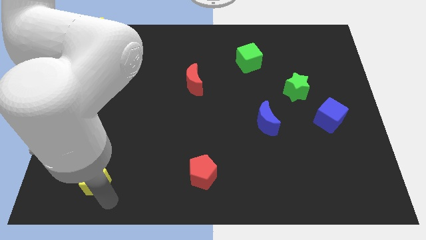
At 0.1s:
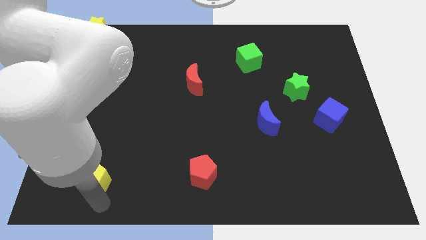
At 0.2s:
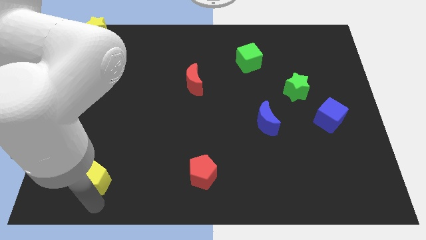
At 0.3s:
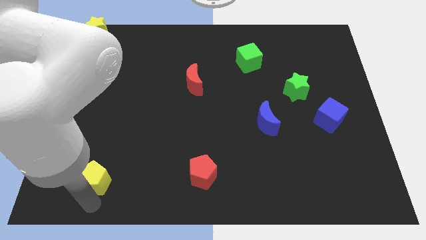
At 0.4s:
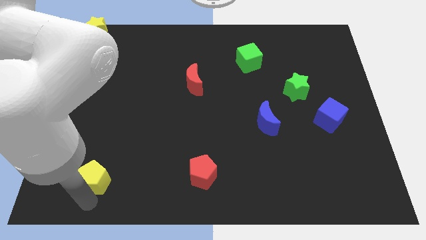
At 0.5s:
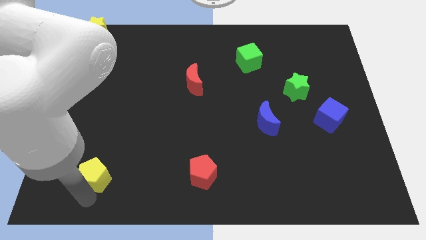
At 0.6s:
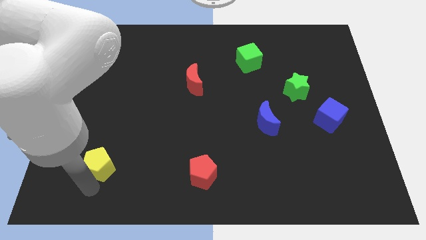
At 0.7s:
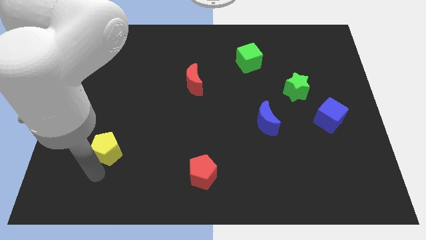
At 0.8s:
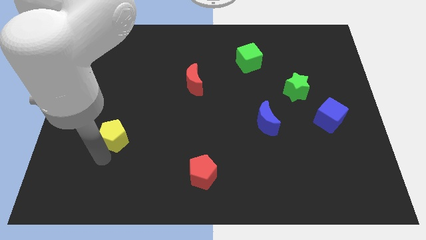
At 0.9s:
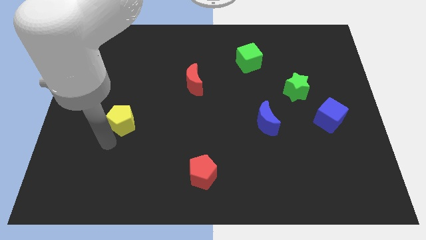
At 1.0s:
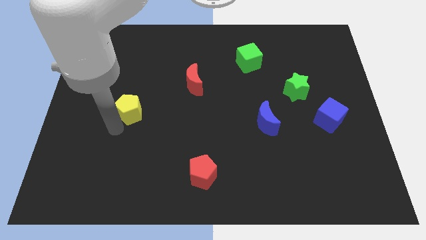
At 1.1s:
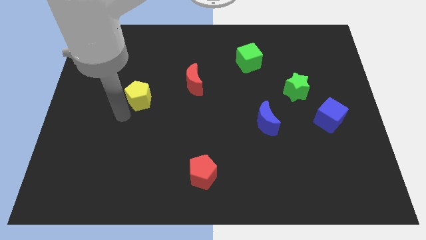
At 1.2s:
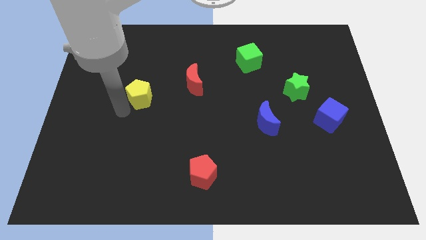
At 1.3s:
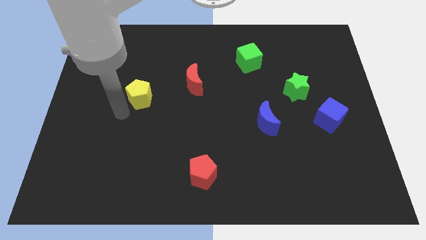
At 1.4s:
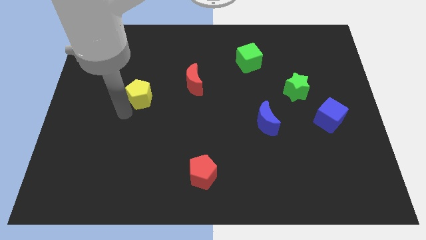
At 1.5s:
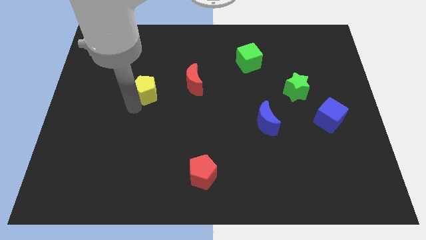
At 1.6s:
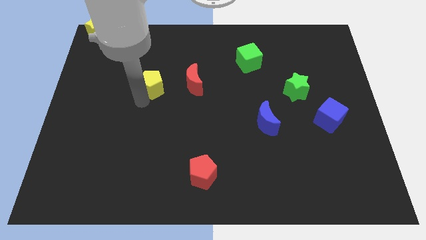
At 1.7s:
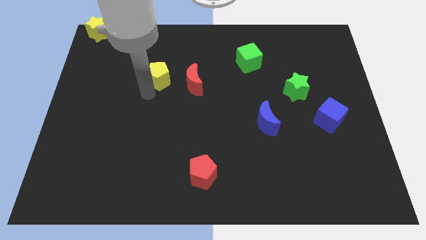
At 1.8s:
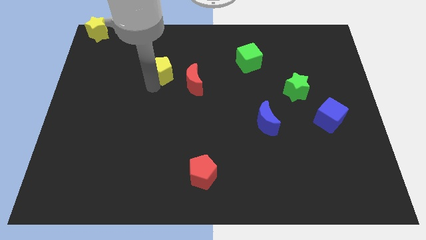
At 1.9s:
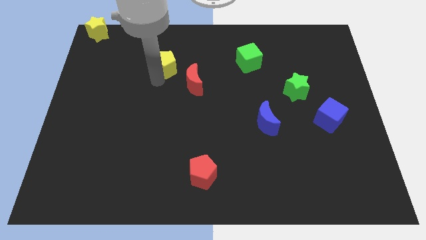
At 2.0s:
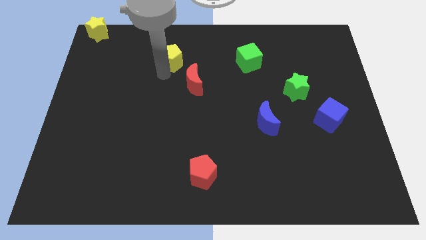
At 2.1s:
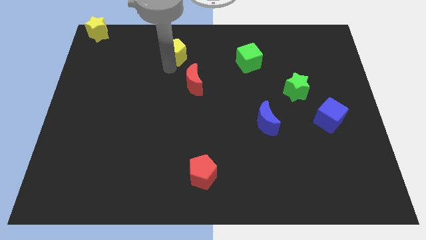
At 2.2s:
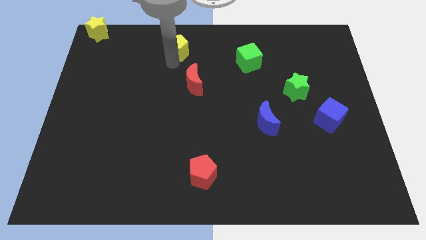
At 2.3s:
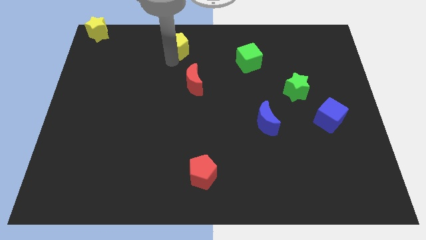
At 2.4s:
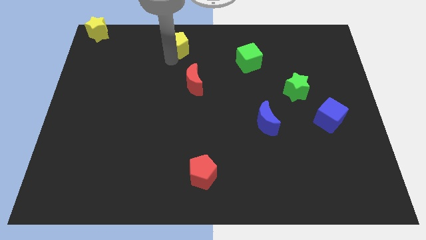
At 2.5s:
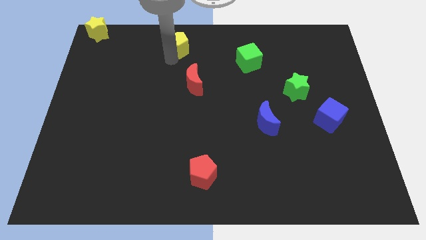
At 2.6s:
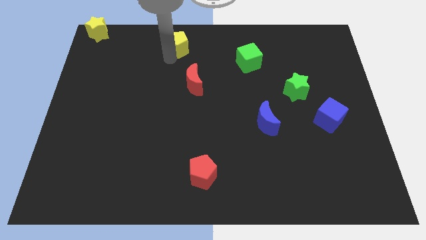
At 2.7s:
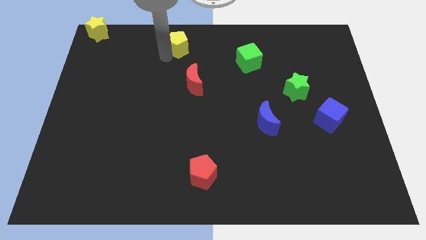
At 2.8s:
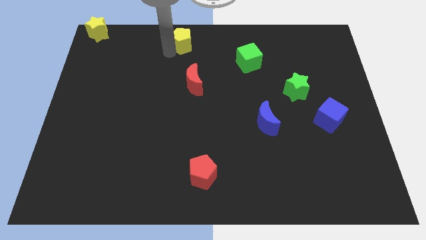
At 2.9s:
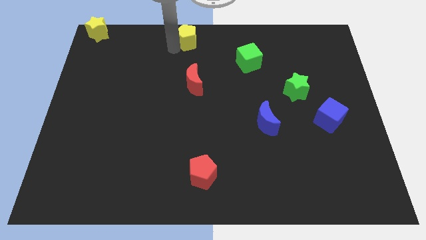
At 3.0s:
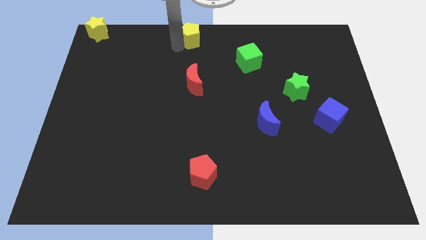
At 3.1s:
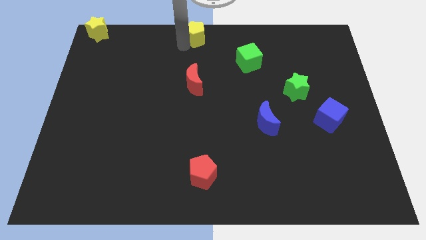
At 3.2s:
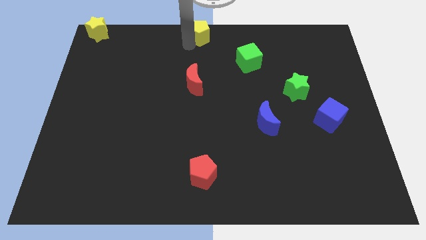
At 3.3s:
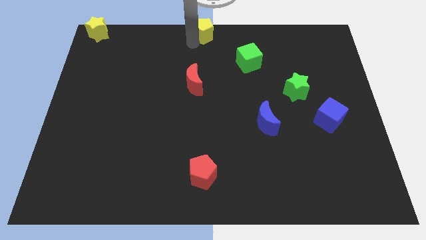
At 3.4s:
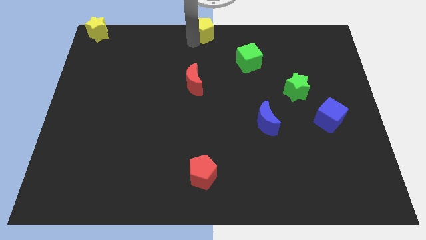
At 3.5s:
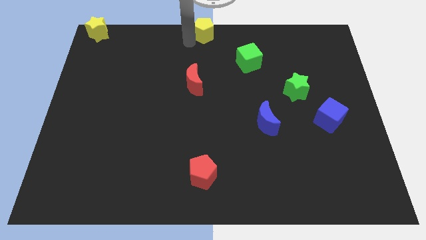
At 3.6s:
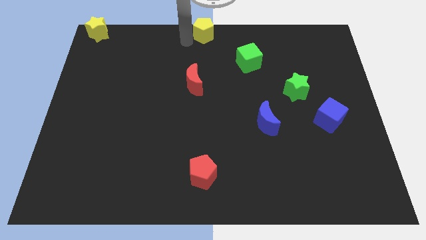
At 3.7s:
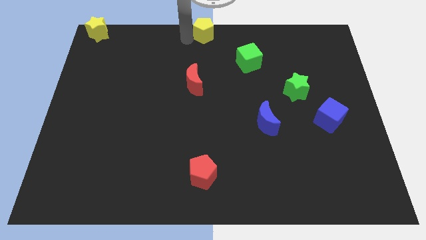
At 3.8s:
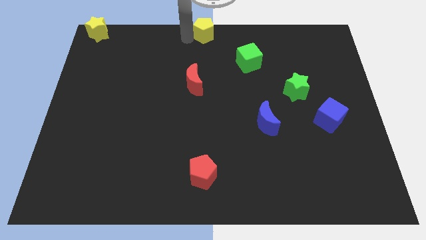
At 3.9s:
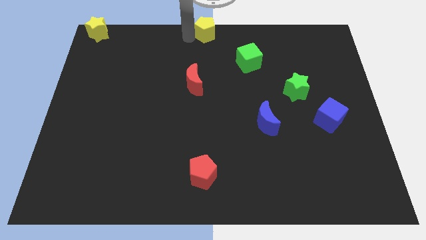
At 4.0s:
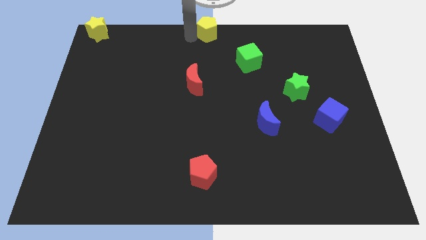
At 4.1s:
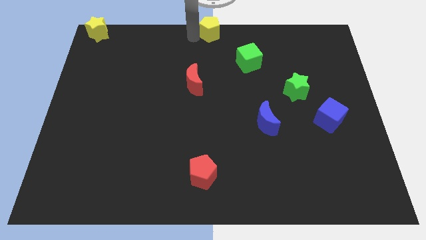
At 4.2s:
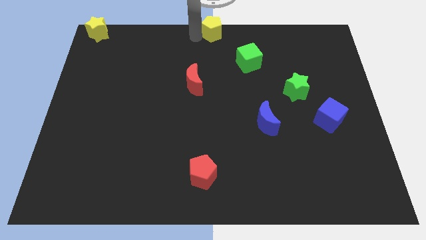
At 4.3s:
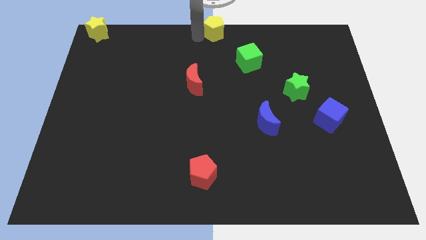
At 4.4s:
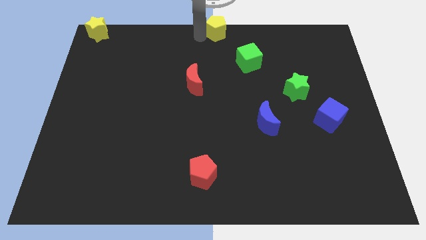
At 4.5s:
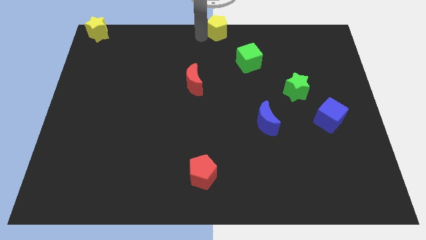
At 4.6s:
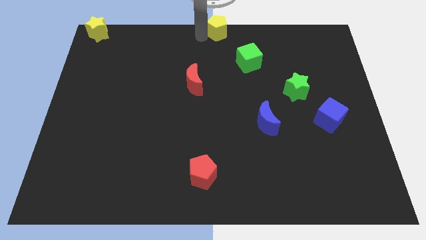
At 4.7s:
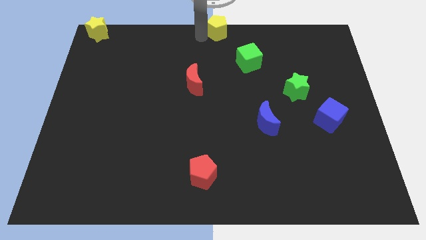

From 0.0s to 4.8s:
push the yellow pentagon to the top center of the board

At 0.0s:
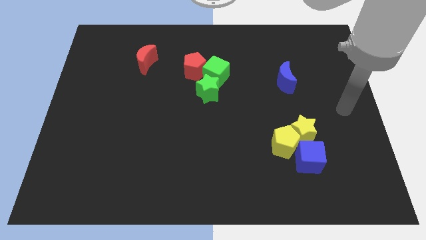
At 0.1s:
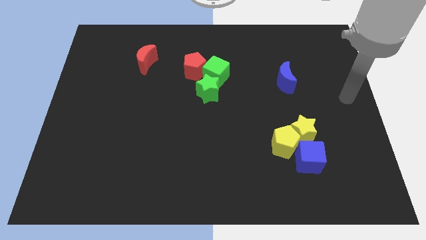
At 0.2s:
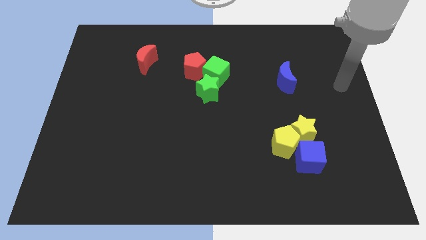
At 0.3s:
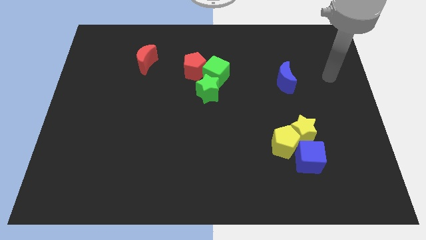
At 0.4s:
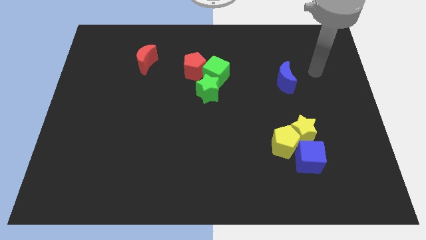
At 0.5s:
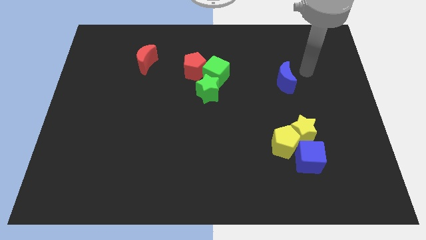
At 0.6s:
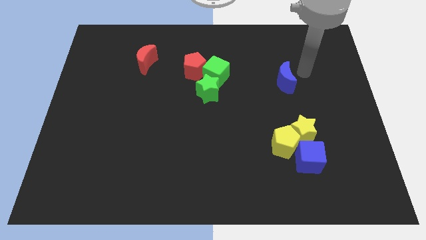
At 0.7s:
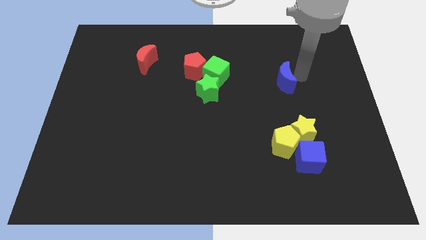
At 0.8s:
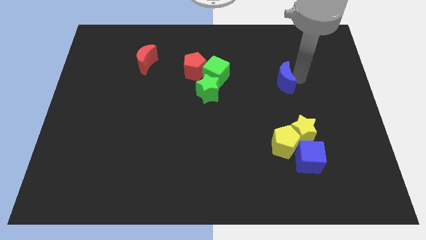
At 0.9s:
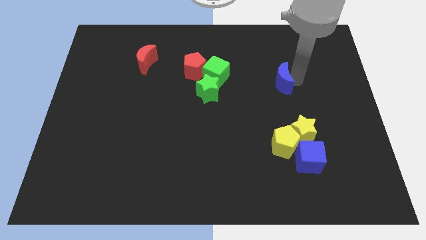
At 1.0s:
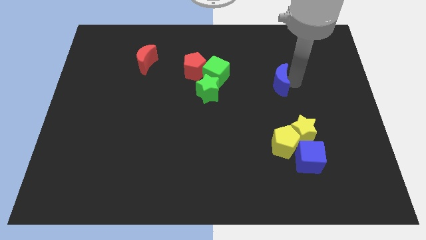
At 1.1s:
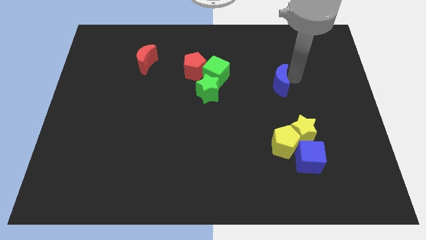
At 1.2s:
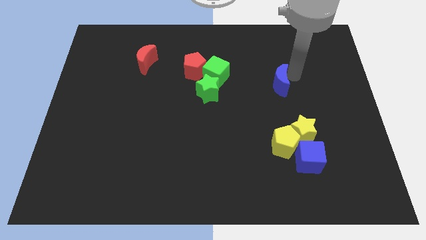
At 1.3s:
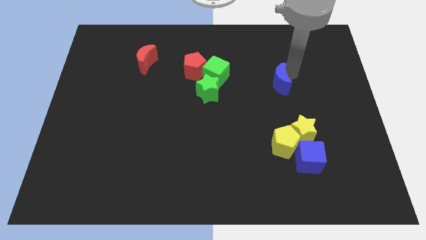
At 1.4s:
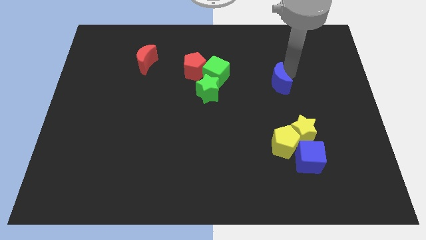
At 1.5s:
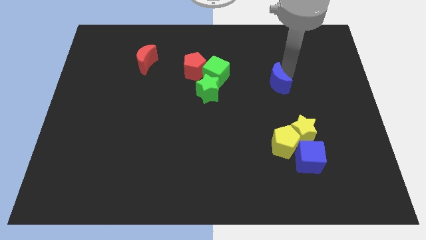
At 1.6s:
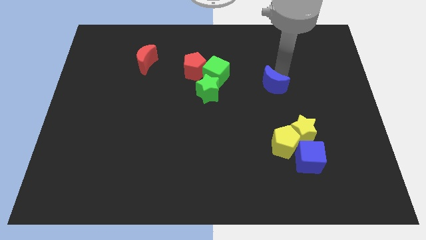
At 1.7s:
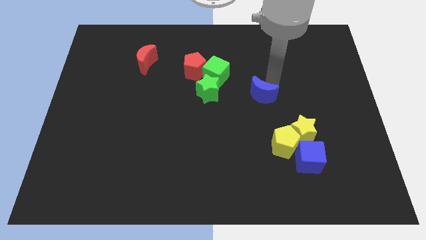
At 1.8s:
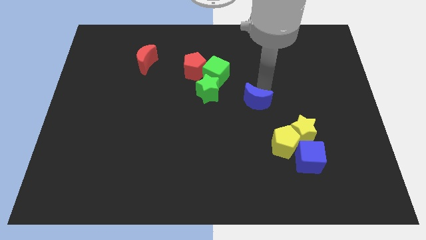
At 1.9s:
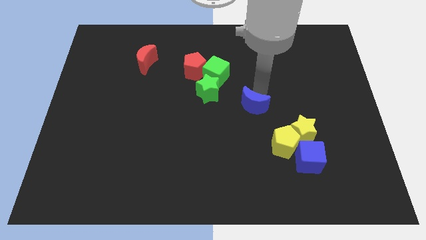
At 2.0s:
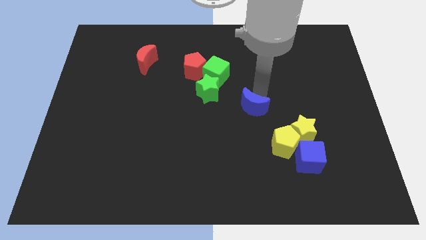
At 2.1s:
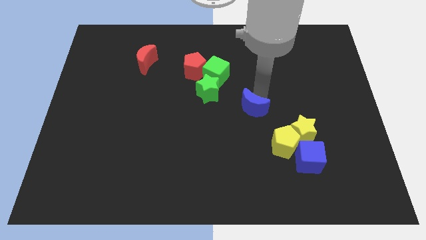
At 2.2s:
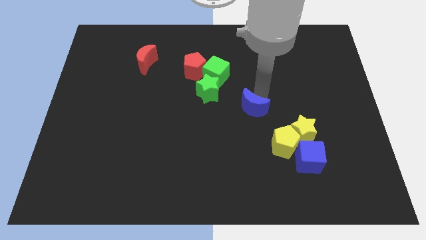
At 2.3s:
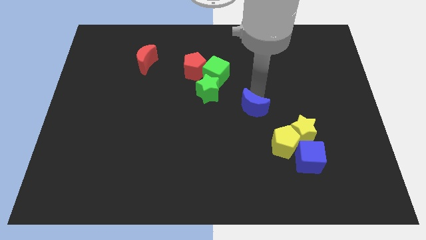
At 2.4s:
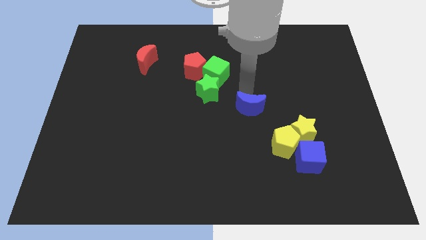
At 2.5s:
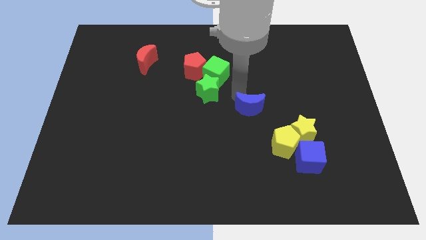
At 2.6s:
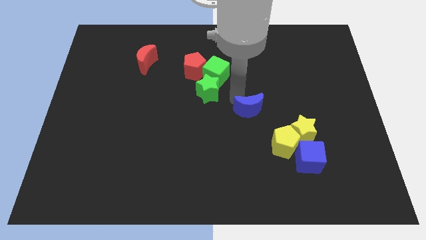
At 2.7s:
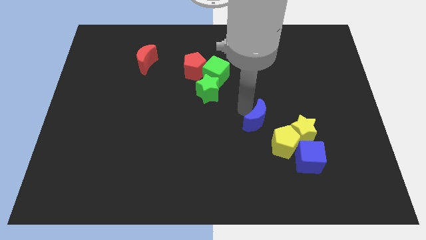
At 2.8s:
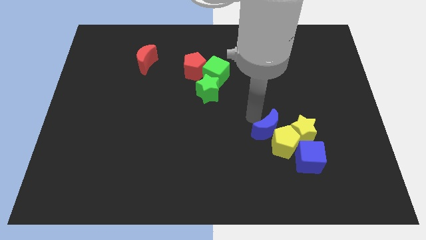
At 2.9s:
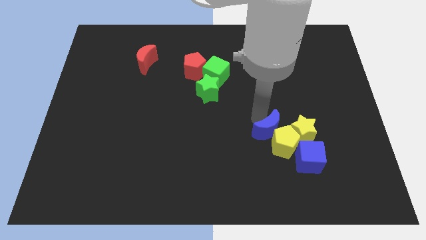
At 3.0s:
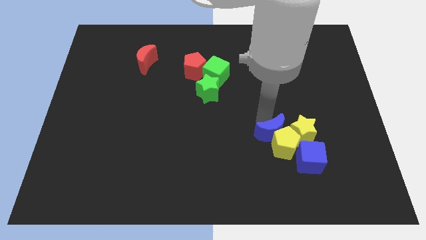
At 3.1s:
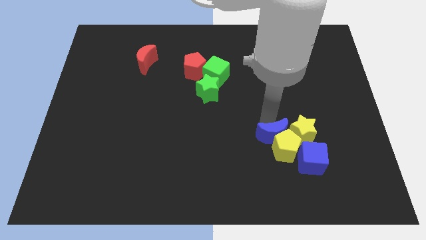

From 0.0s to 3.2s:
place blue crescent into yellow pentagon

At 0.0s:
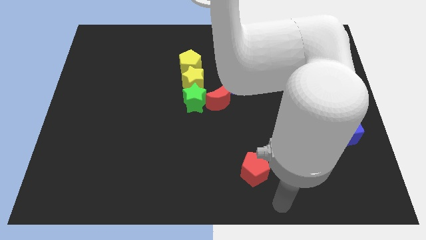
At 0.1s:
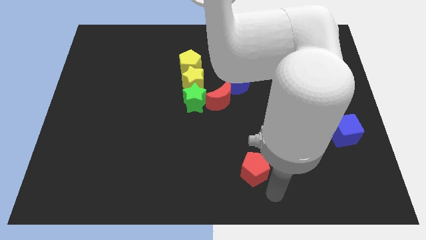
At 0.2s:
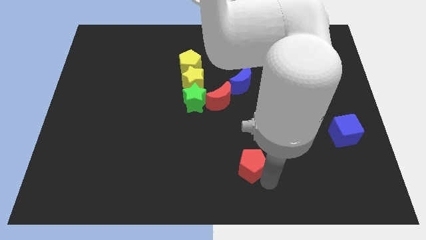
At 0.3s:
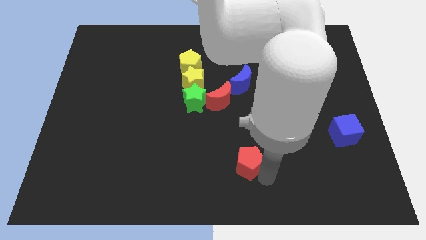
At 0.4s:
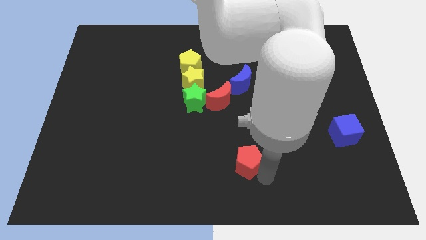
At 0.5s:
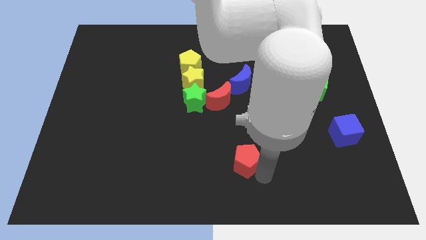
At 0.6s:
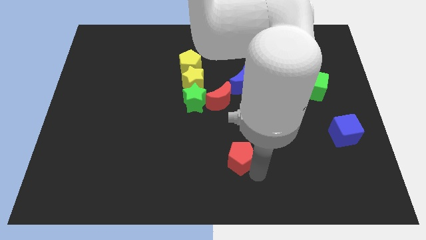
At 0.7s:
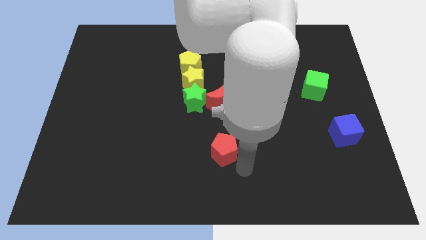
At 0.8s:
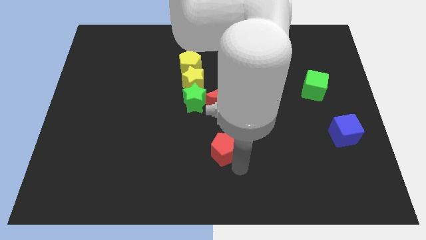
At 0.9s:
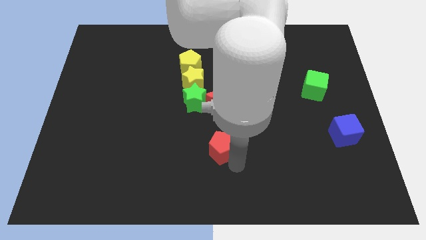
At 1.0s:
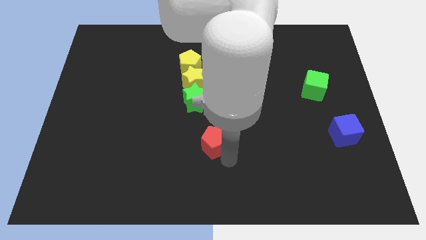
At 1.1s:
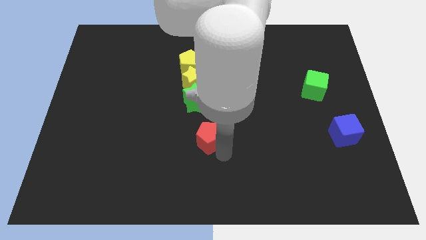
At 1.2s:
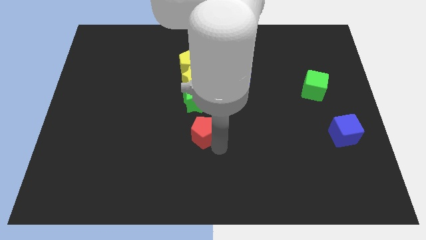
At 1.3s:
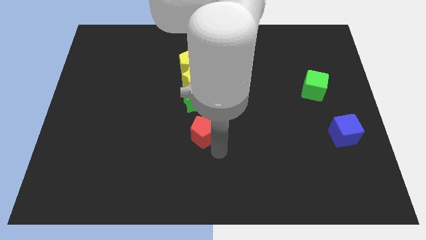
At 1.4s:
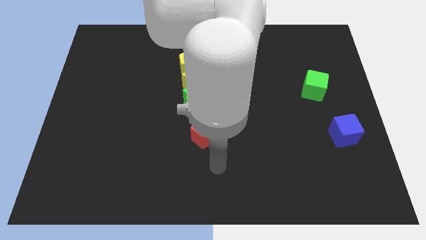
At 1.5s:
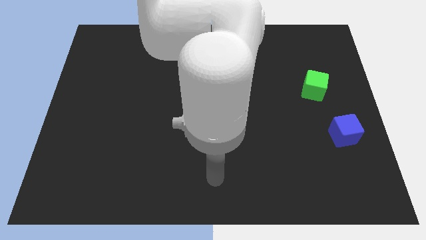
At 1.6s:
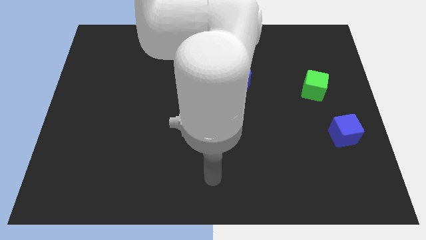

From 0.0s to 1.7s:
place the red pentagon below the green star
